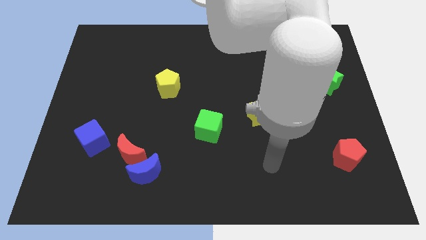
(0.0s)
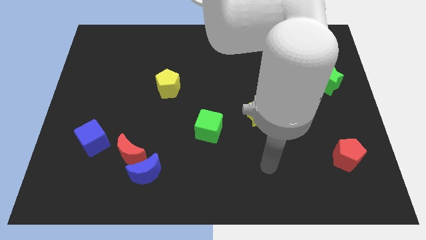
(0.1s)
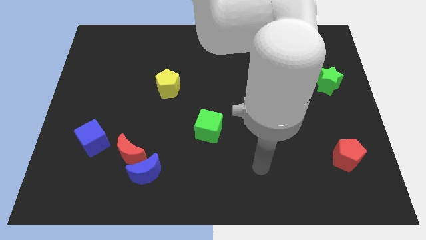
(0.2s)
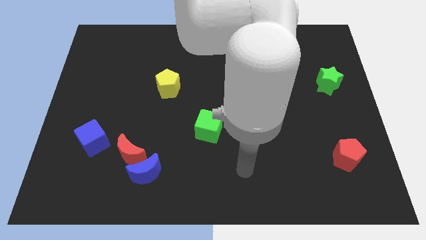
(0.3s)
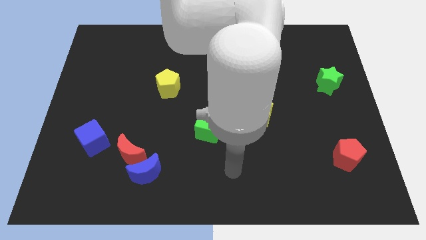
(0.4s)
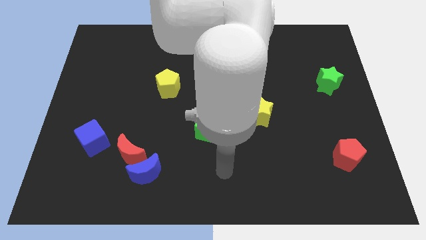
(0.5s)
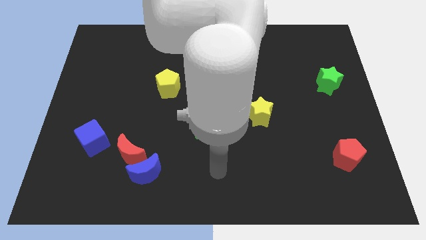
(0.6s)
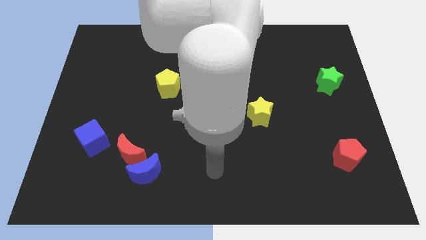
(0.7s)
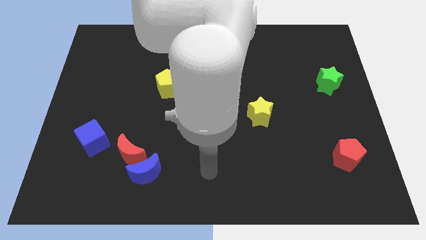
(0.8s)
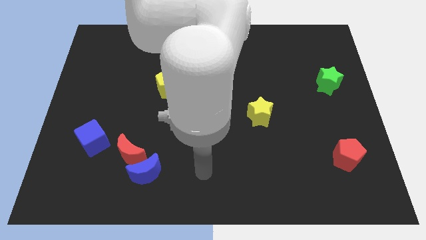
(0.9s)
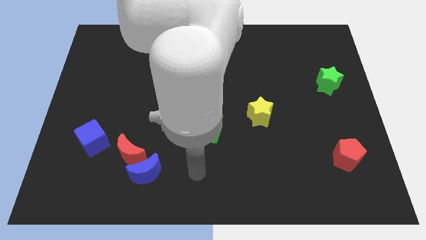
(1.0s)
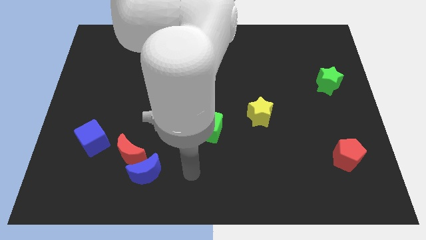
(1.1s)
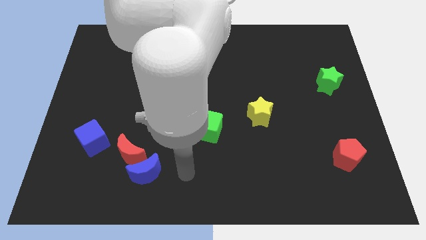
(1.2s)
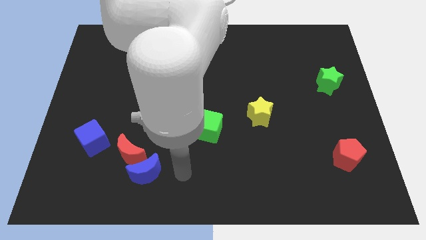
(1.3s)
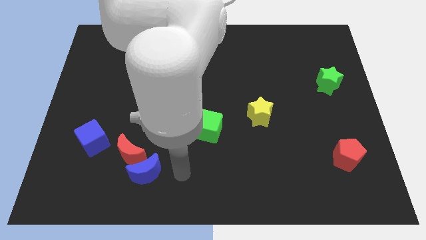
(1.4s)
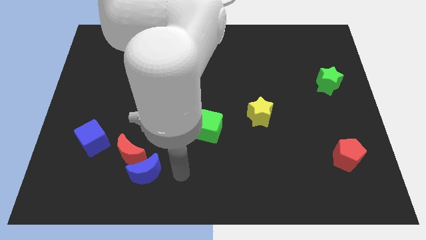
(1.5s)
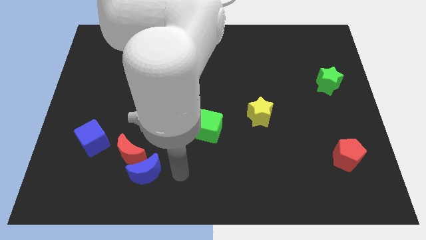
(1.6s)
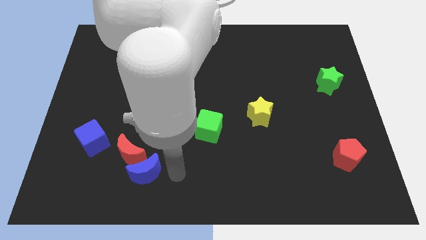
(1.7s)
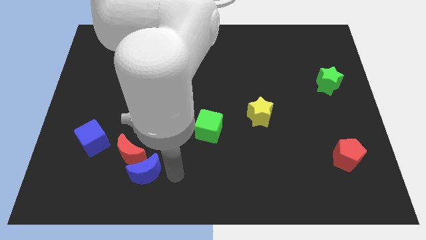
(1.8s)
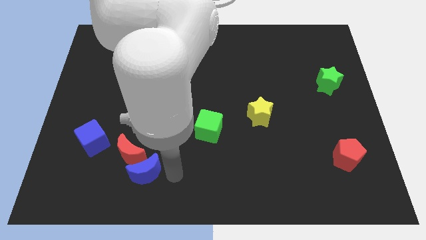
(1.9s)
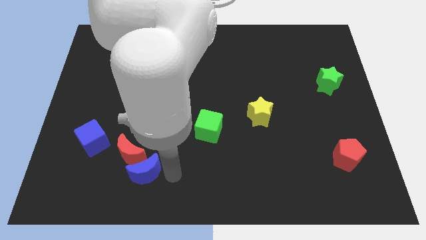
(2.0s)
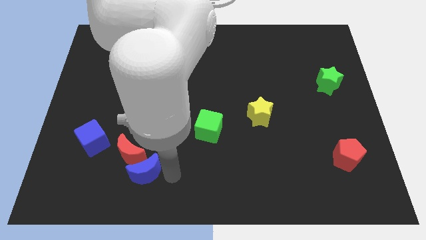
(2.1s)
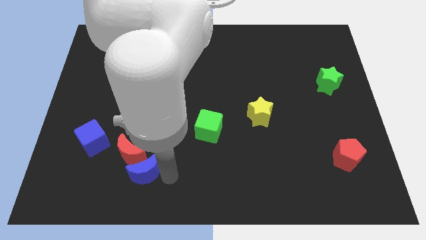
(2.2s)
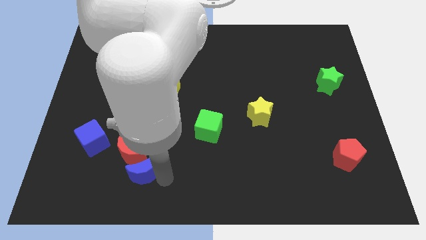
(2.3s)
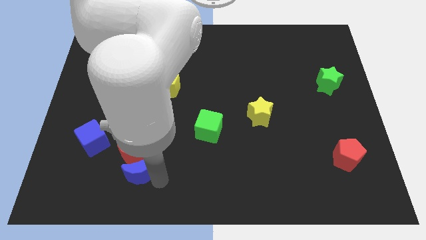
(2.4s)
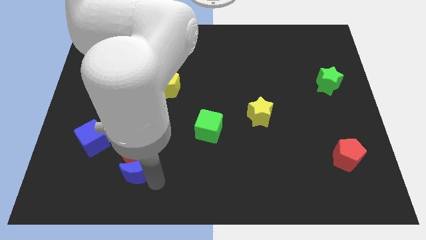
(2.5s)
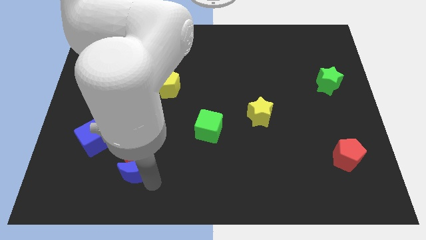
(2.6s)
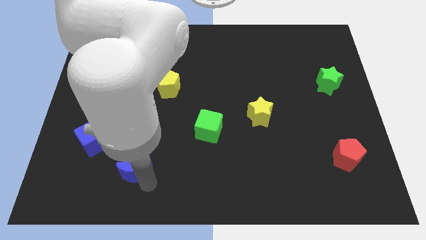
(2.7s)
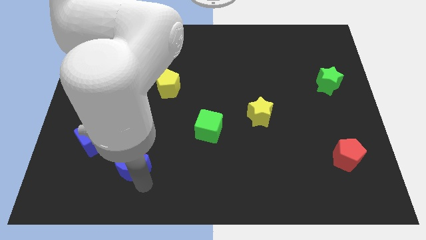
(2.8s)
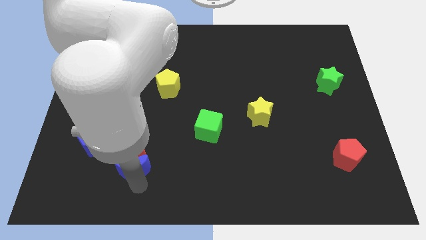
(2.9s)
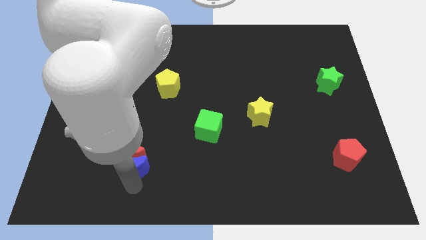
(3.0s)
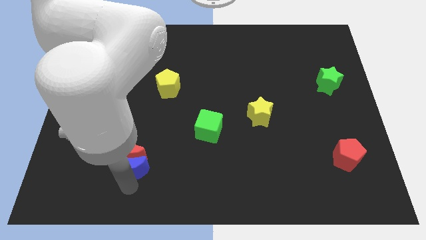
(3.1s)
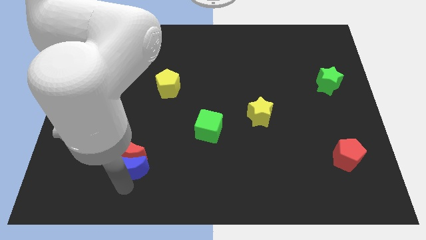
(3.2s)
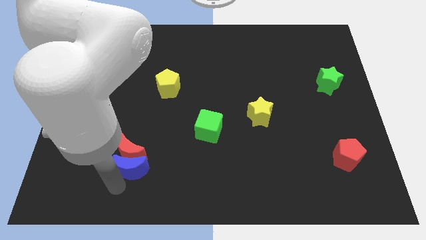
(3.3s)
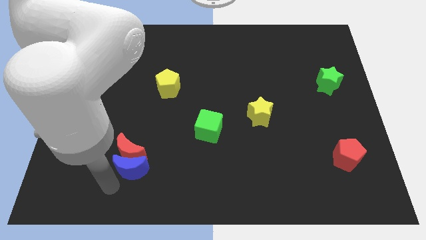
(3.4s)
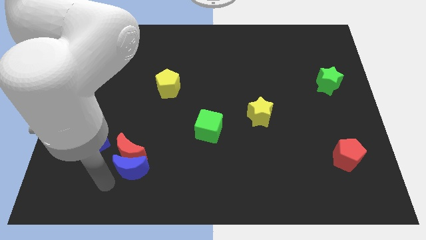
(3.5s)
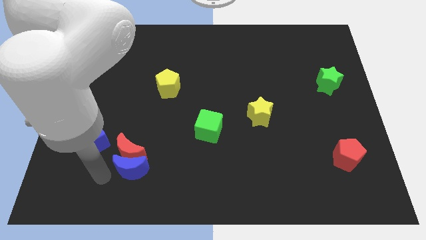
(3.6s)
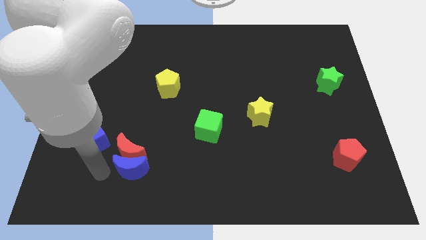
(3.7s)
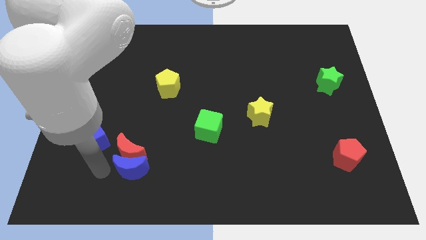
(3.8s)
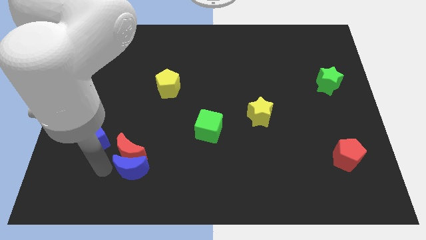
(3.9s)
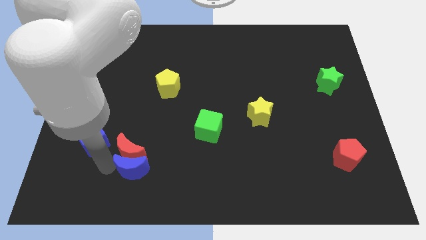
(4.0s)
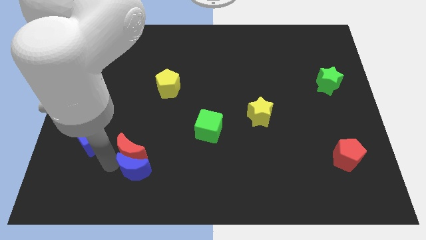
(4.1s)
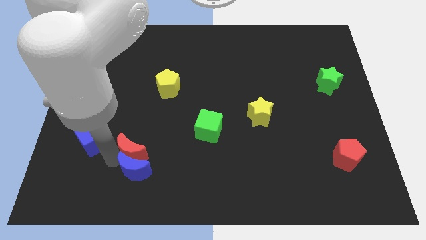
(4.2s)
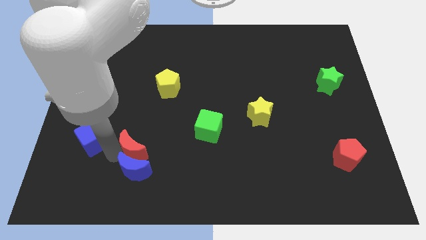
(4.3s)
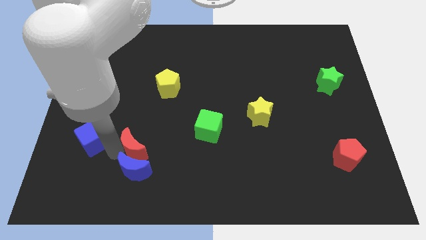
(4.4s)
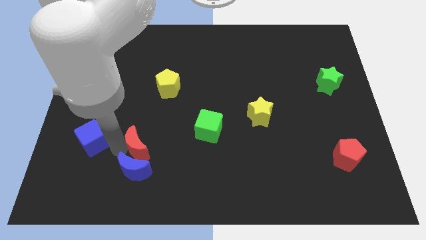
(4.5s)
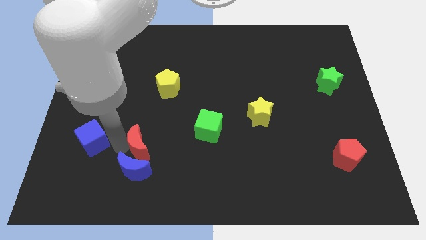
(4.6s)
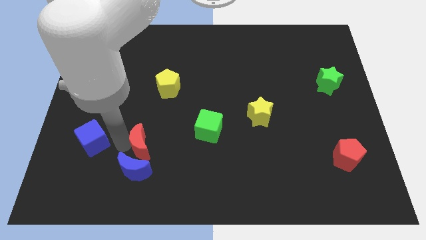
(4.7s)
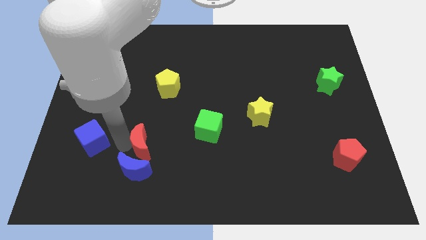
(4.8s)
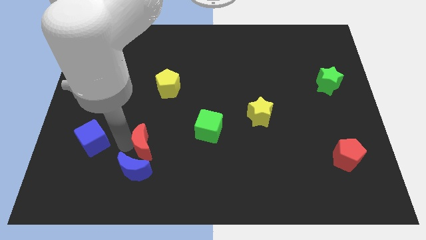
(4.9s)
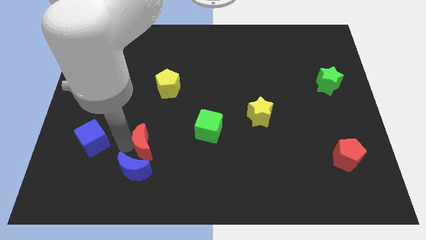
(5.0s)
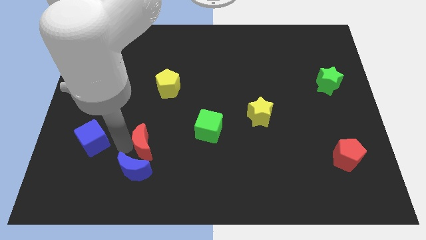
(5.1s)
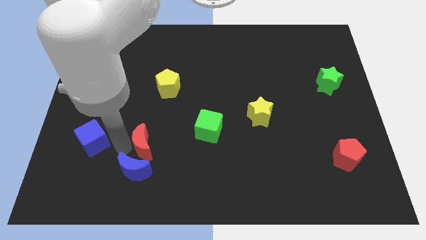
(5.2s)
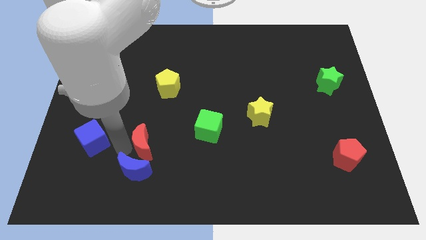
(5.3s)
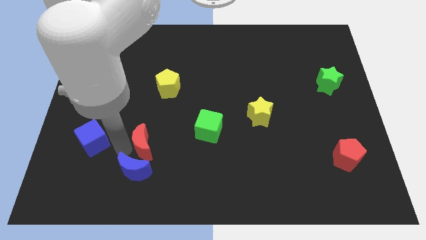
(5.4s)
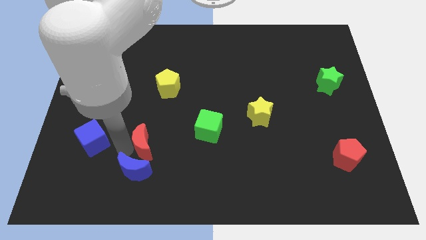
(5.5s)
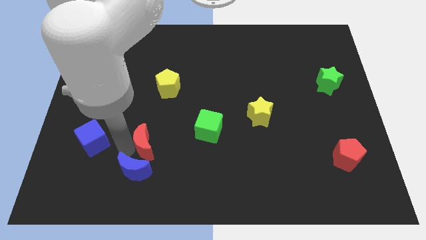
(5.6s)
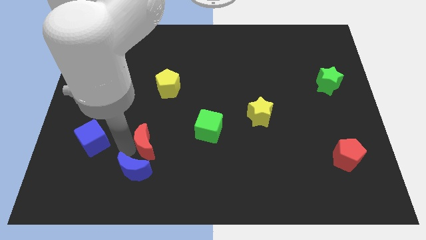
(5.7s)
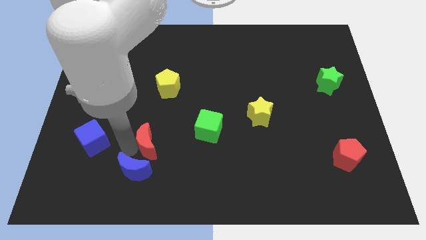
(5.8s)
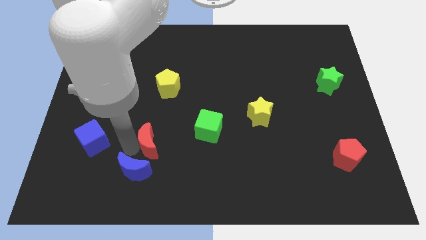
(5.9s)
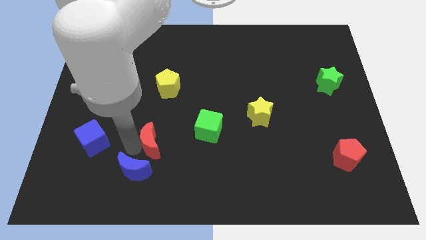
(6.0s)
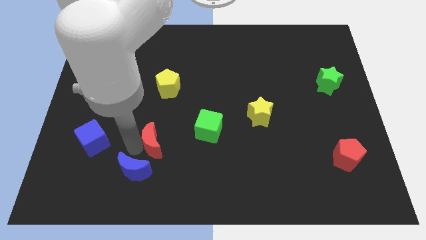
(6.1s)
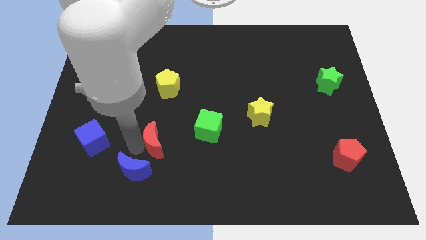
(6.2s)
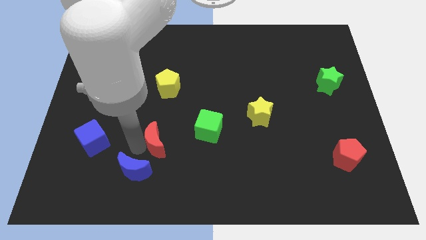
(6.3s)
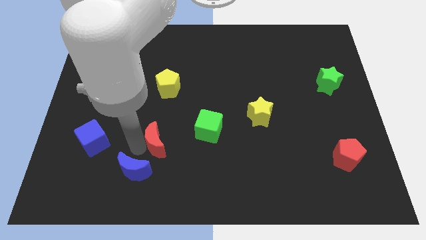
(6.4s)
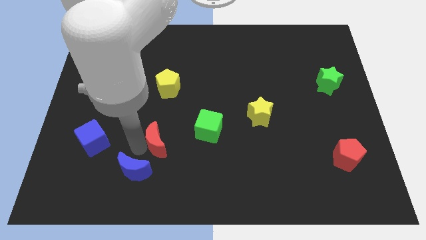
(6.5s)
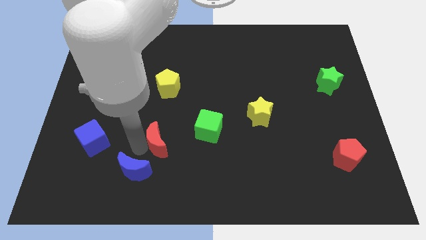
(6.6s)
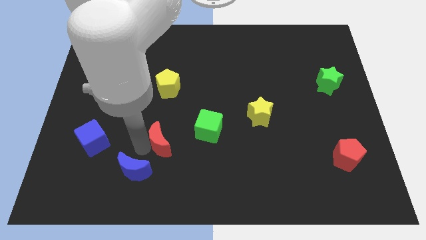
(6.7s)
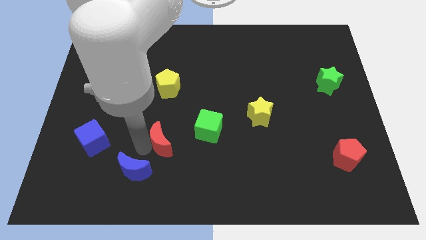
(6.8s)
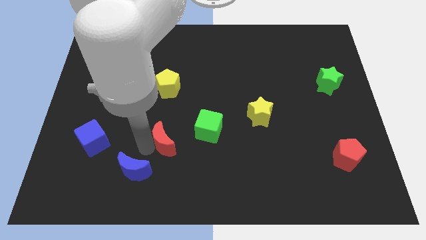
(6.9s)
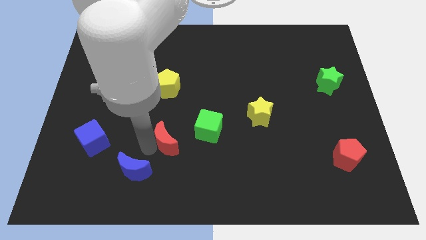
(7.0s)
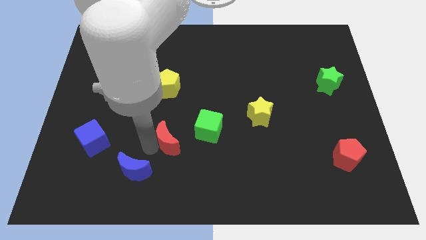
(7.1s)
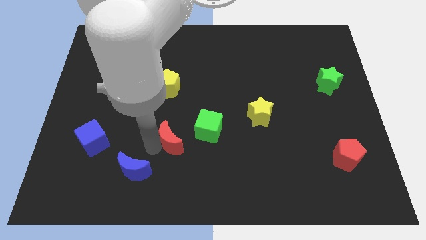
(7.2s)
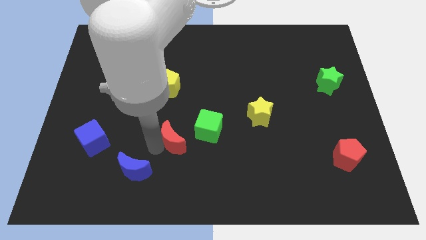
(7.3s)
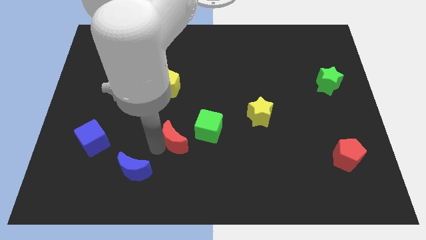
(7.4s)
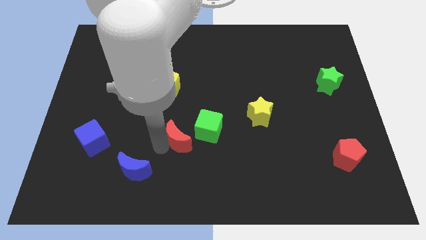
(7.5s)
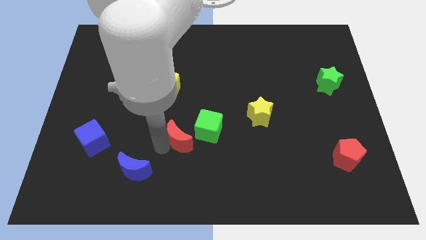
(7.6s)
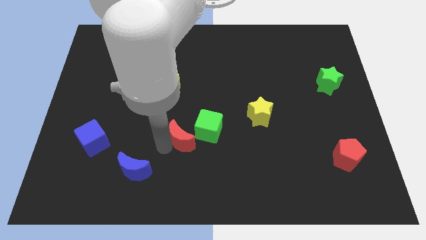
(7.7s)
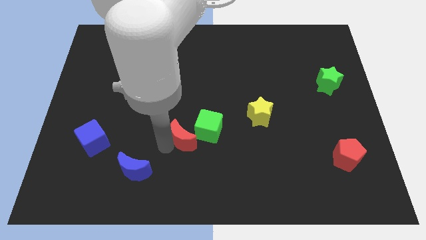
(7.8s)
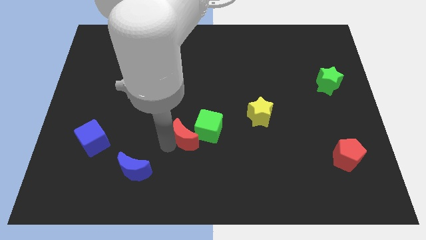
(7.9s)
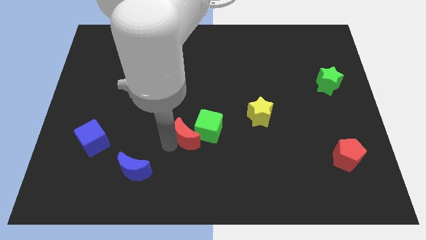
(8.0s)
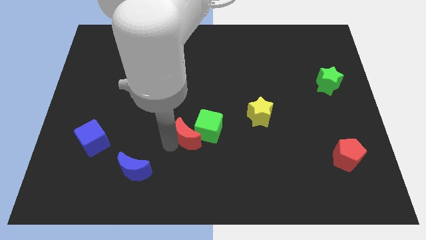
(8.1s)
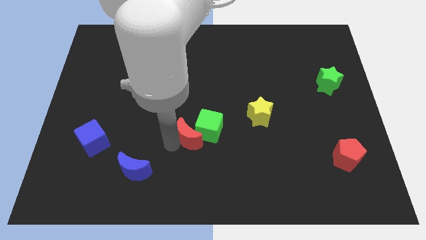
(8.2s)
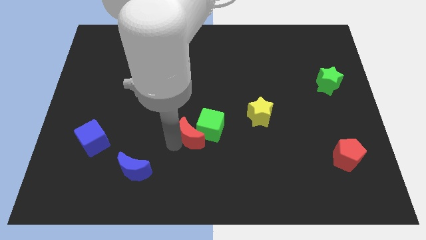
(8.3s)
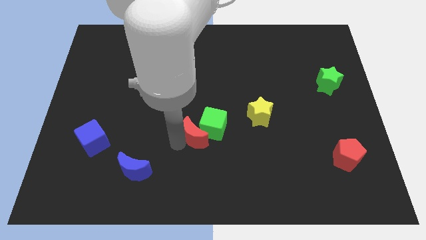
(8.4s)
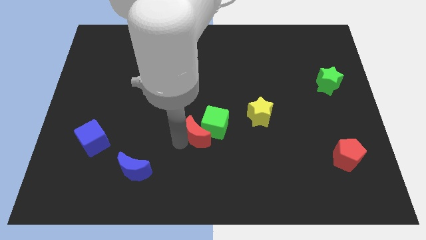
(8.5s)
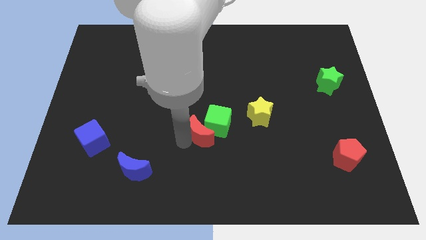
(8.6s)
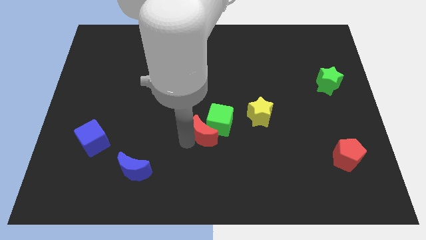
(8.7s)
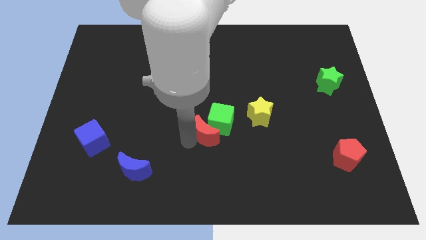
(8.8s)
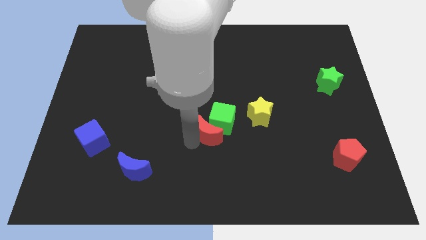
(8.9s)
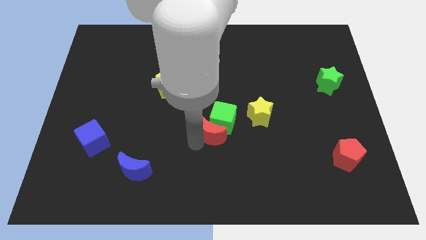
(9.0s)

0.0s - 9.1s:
push the red crescent close to the green cube
